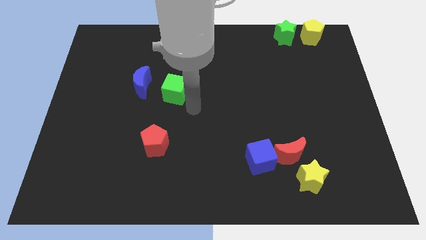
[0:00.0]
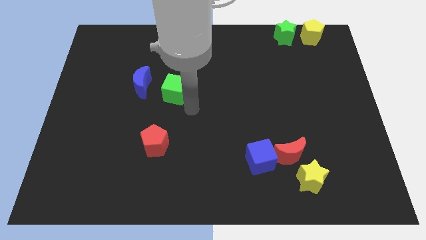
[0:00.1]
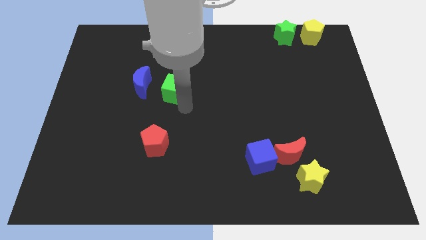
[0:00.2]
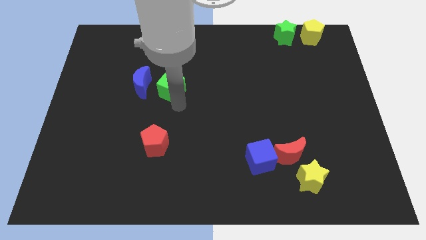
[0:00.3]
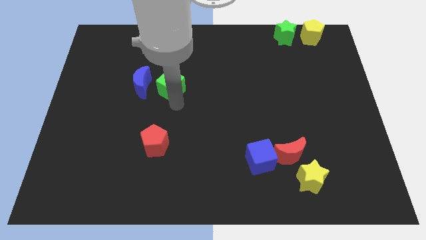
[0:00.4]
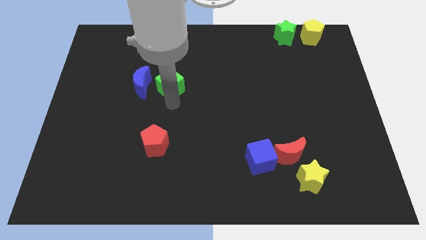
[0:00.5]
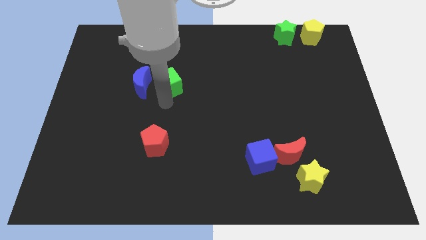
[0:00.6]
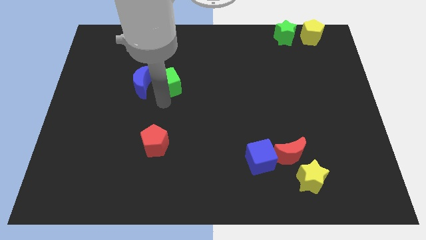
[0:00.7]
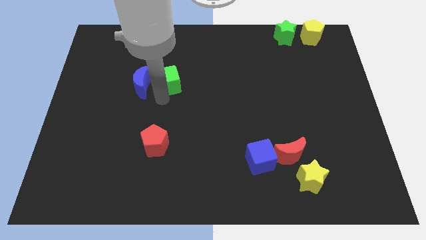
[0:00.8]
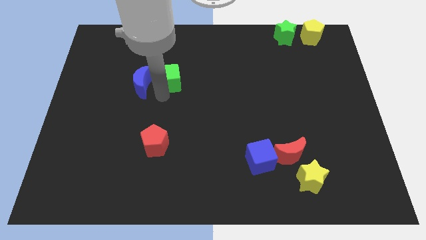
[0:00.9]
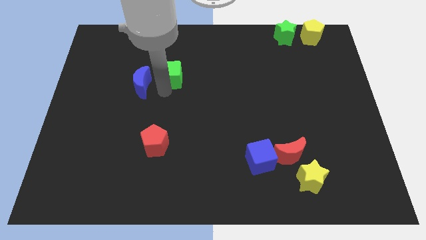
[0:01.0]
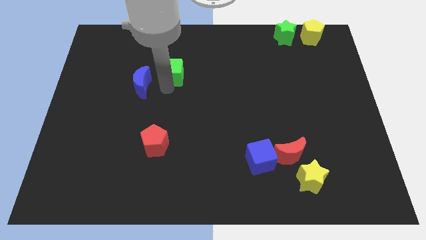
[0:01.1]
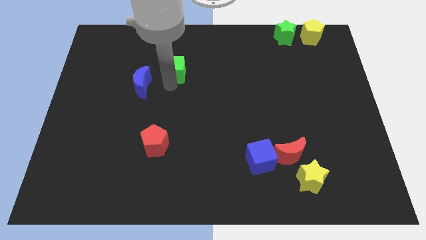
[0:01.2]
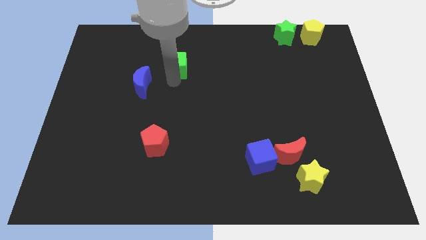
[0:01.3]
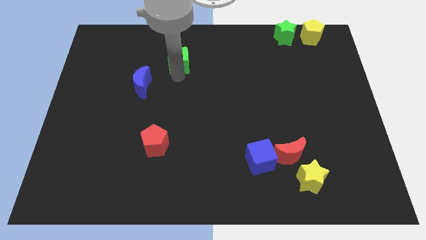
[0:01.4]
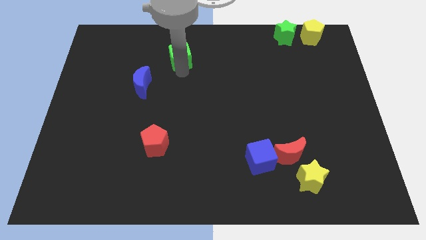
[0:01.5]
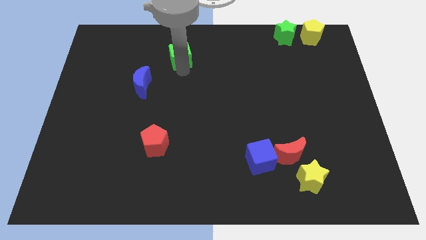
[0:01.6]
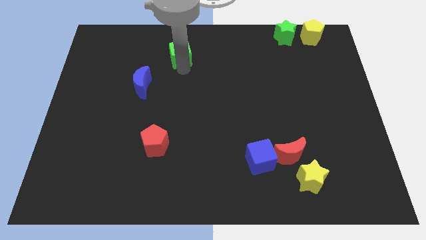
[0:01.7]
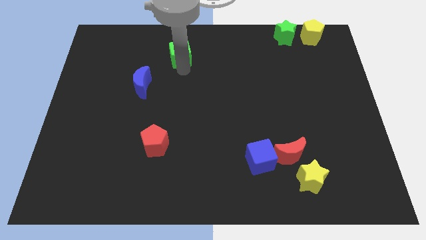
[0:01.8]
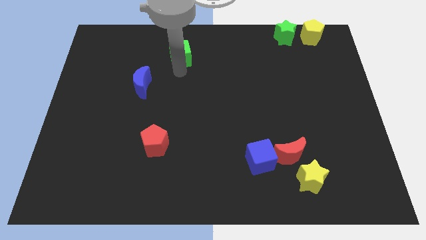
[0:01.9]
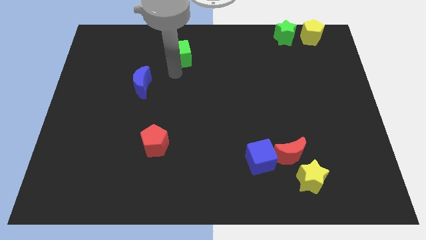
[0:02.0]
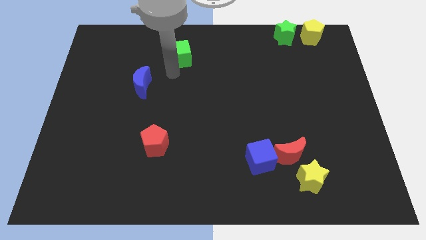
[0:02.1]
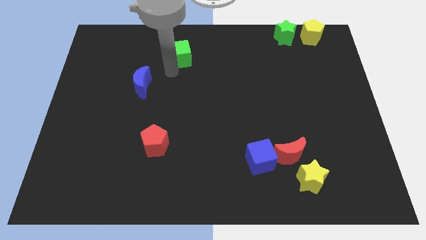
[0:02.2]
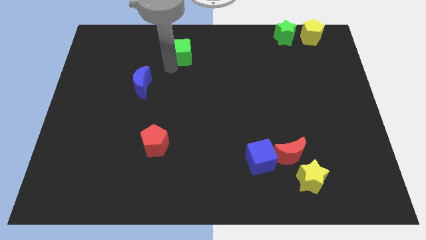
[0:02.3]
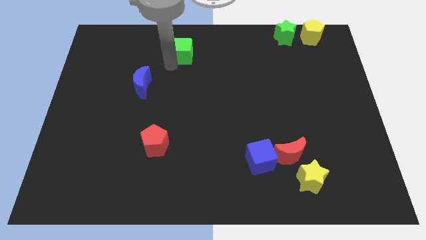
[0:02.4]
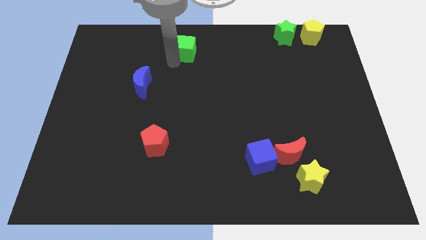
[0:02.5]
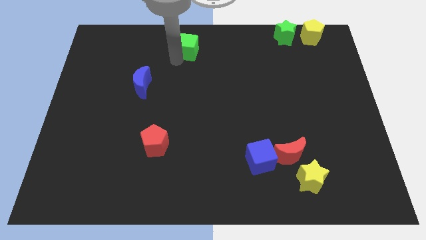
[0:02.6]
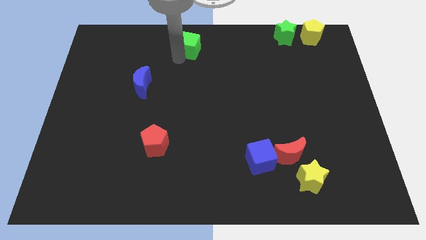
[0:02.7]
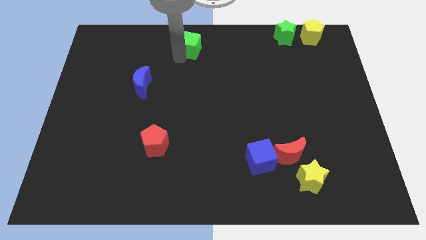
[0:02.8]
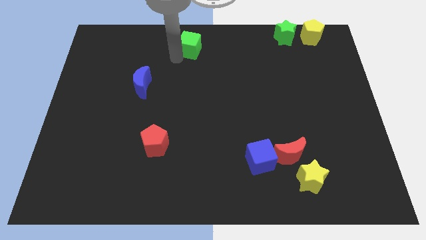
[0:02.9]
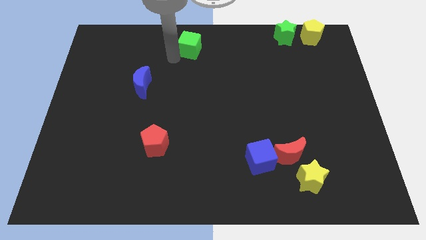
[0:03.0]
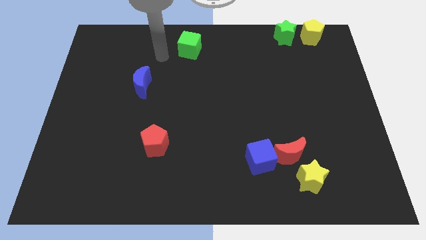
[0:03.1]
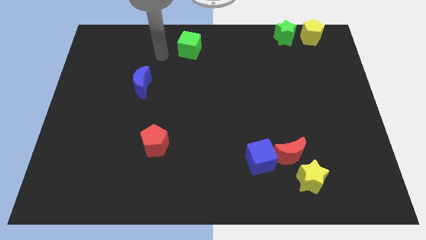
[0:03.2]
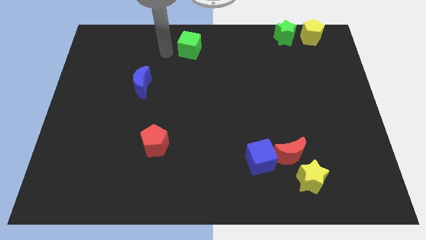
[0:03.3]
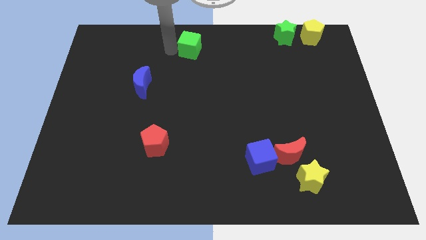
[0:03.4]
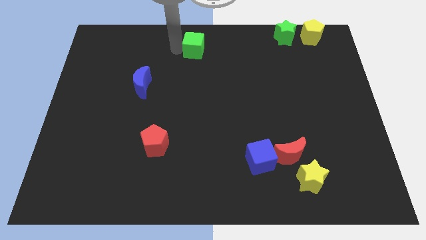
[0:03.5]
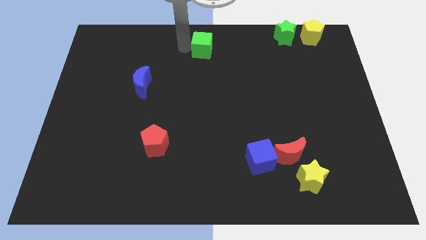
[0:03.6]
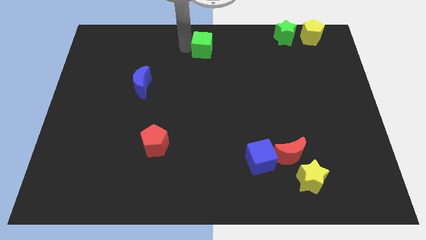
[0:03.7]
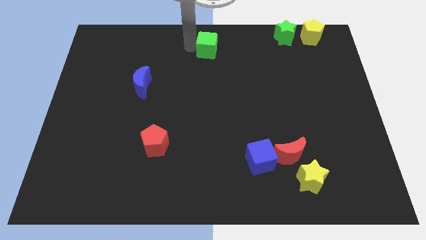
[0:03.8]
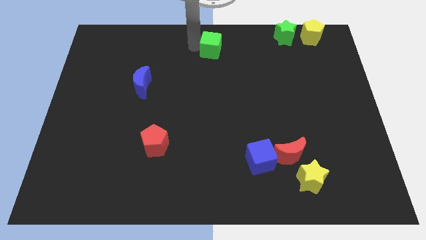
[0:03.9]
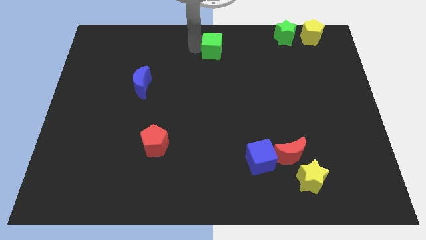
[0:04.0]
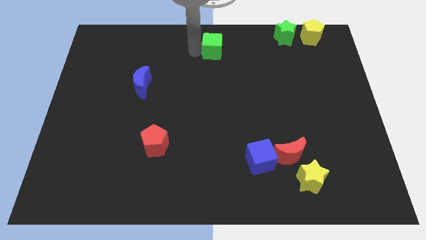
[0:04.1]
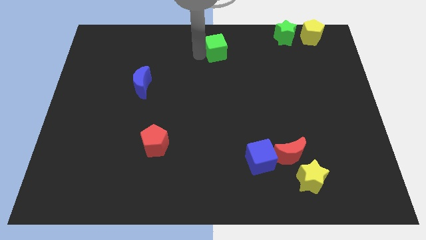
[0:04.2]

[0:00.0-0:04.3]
push the green cube to the top center

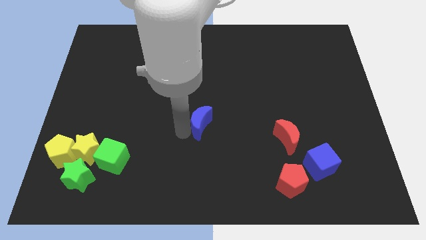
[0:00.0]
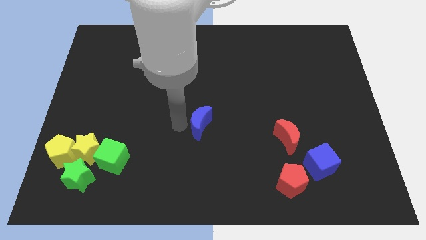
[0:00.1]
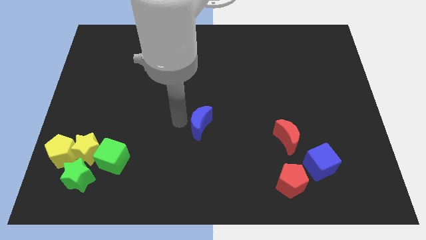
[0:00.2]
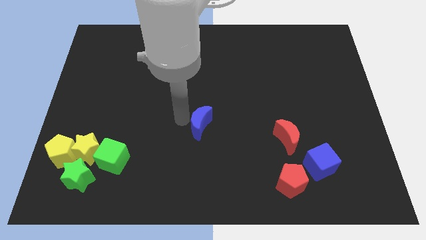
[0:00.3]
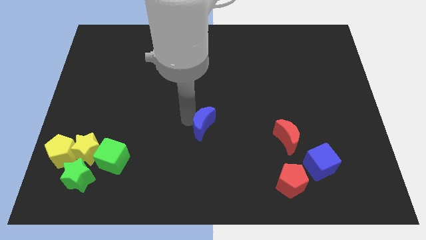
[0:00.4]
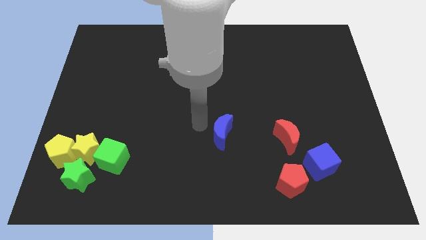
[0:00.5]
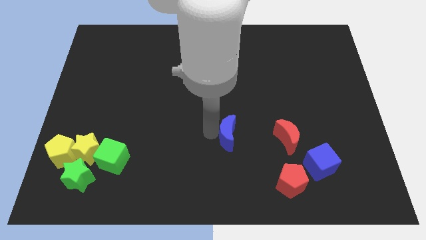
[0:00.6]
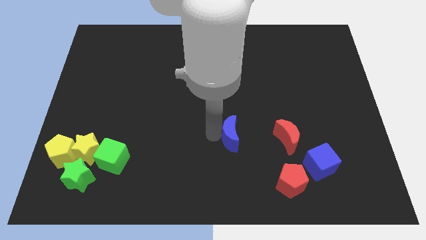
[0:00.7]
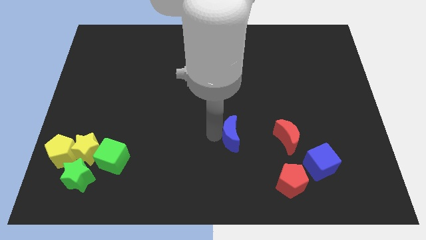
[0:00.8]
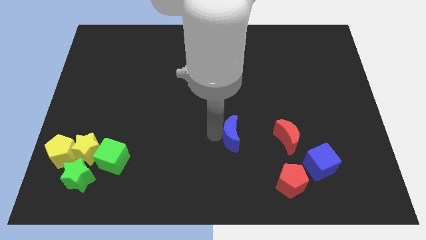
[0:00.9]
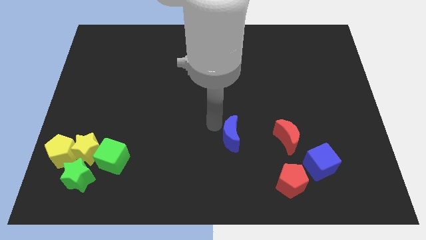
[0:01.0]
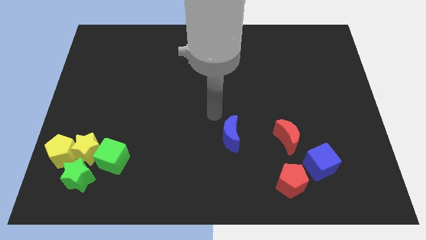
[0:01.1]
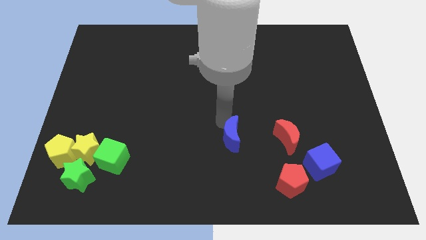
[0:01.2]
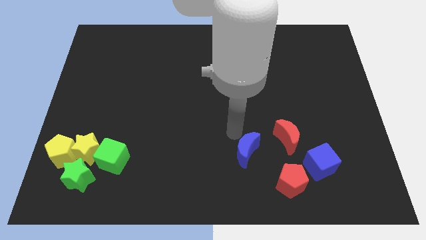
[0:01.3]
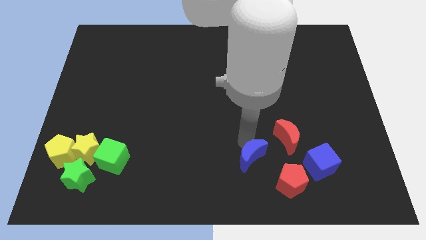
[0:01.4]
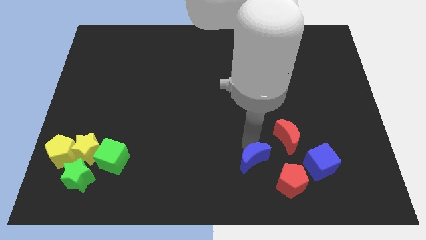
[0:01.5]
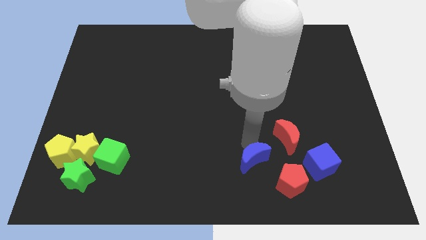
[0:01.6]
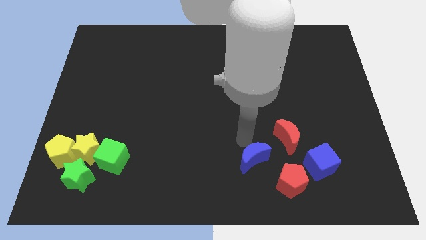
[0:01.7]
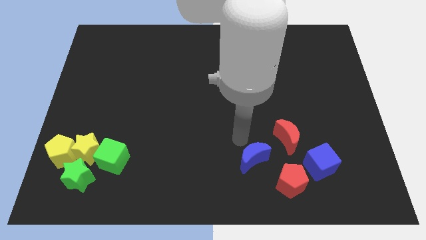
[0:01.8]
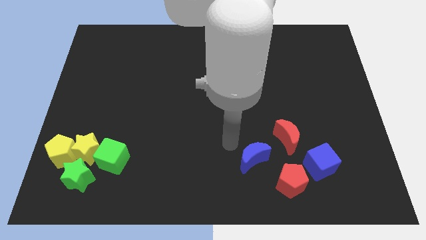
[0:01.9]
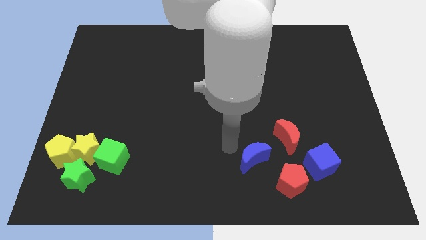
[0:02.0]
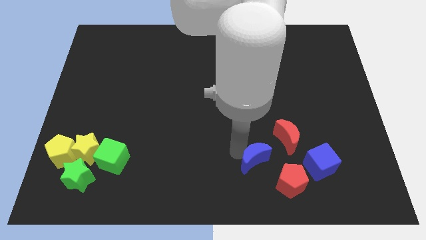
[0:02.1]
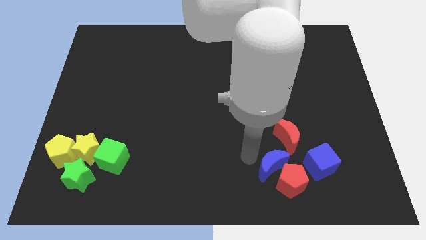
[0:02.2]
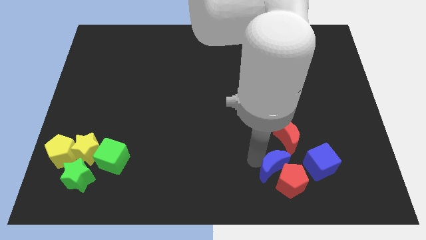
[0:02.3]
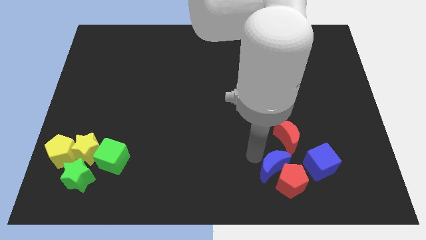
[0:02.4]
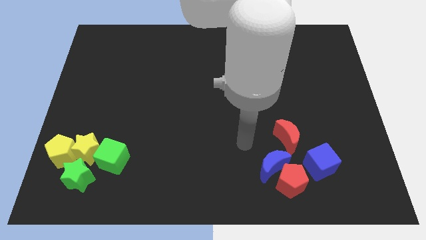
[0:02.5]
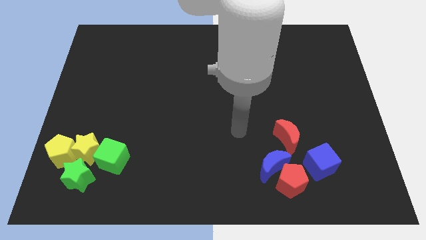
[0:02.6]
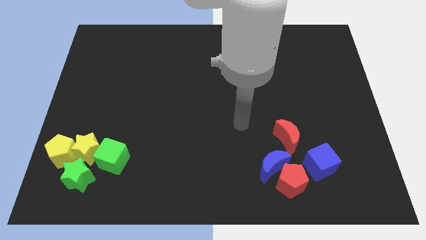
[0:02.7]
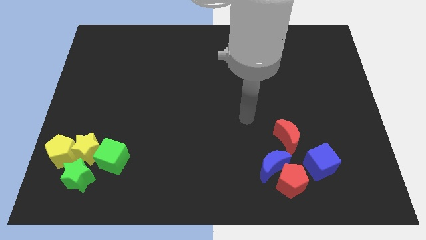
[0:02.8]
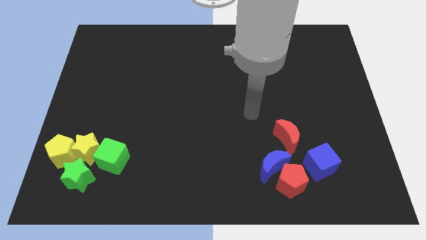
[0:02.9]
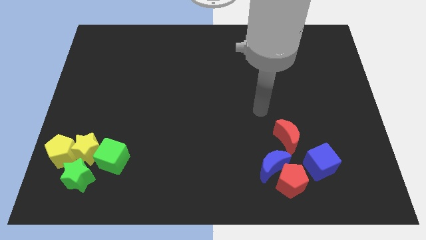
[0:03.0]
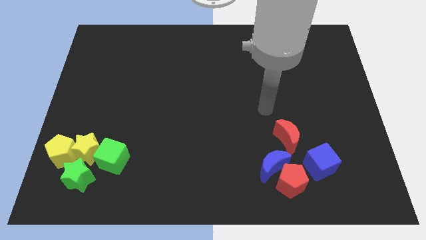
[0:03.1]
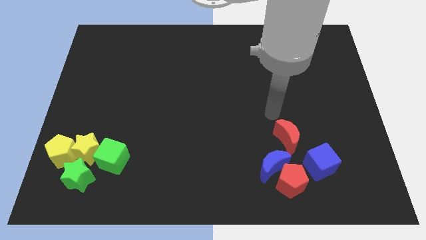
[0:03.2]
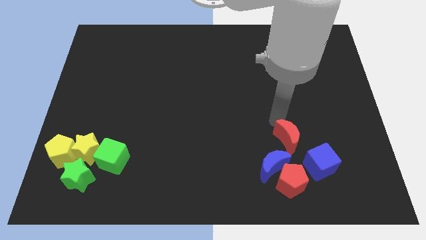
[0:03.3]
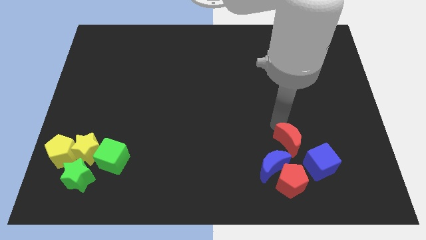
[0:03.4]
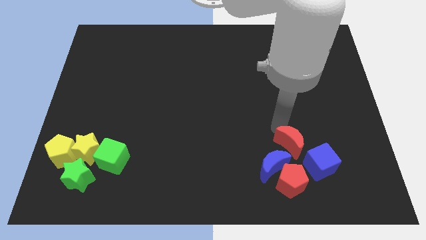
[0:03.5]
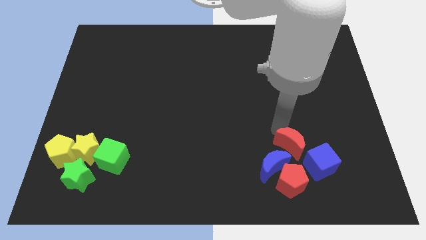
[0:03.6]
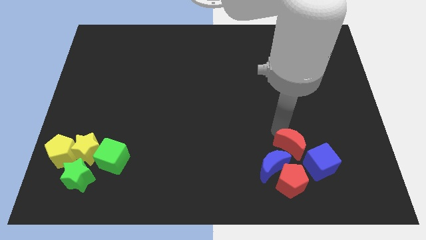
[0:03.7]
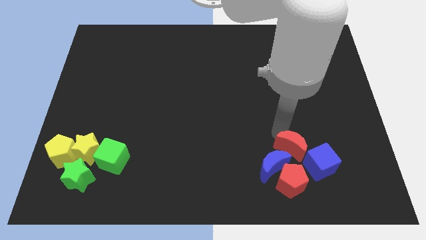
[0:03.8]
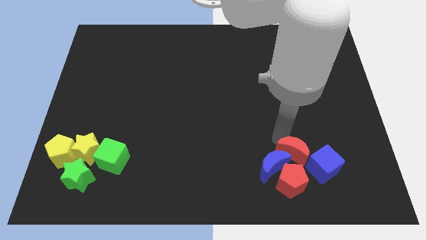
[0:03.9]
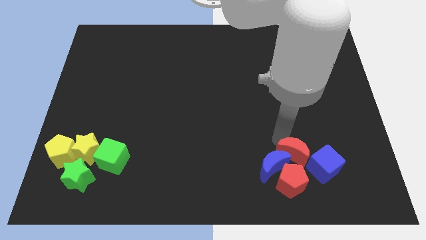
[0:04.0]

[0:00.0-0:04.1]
place the blue crescent towards the top left side of the red pentagon

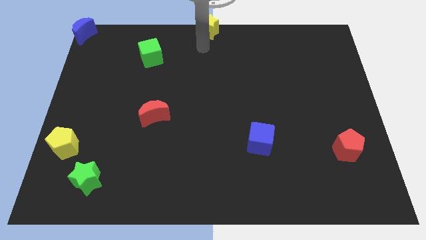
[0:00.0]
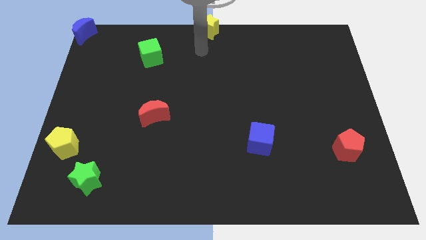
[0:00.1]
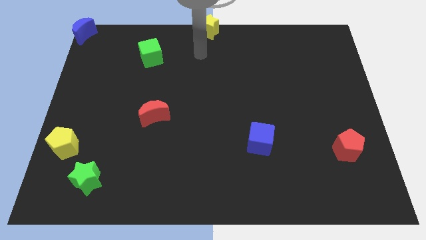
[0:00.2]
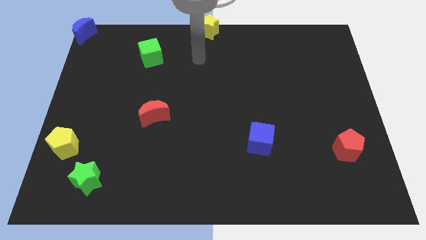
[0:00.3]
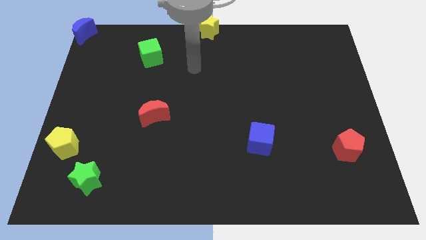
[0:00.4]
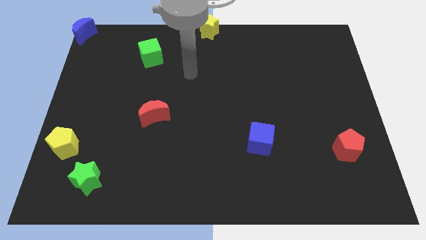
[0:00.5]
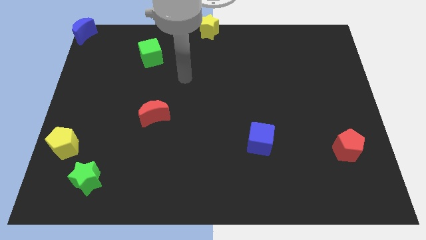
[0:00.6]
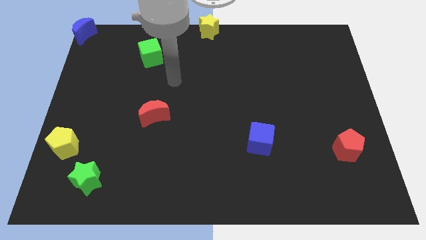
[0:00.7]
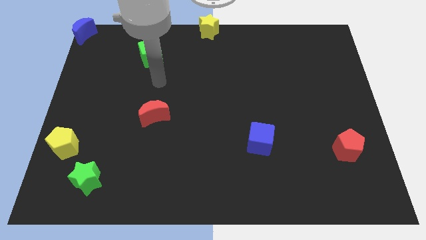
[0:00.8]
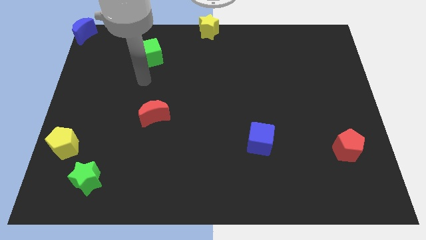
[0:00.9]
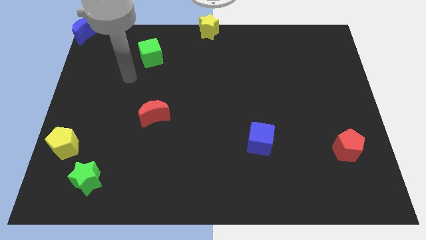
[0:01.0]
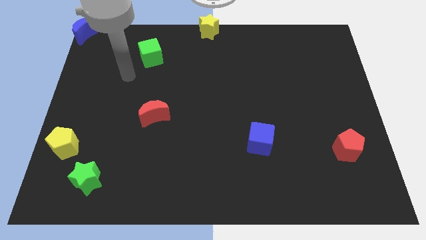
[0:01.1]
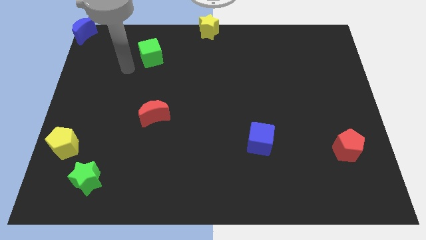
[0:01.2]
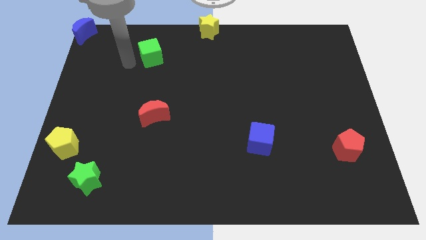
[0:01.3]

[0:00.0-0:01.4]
point your arm at the left of the green cube
